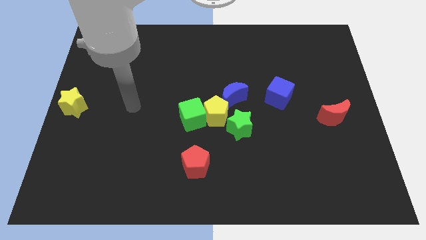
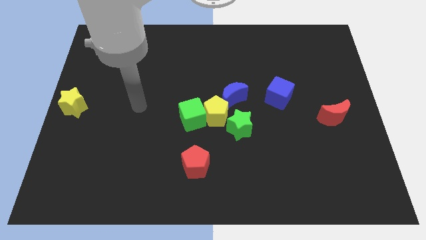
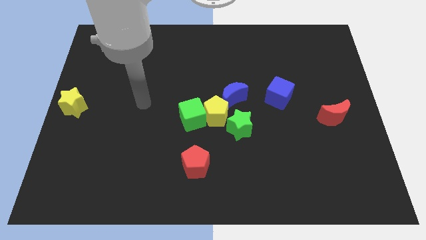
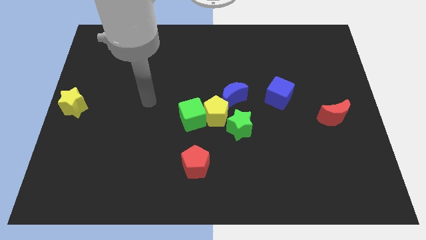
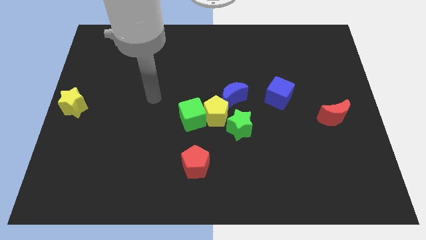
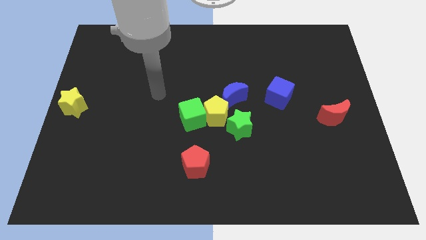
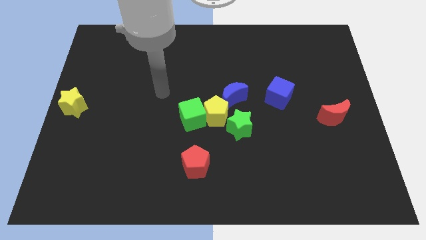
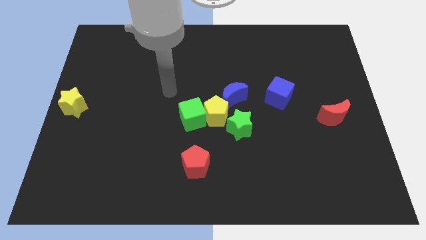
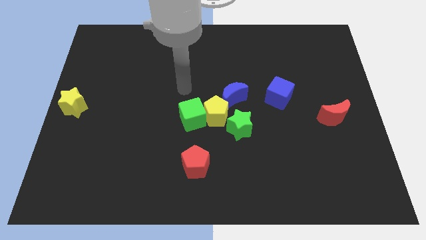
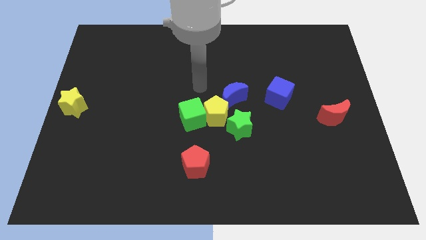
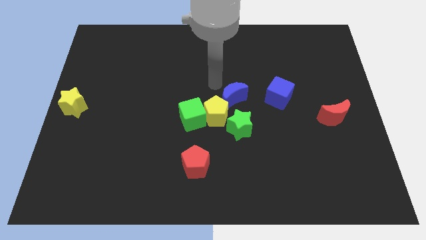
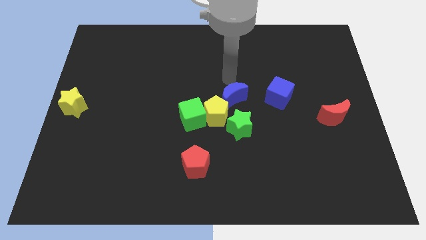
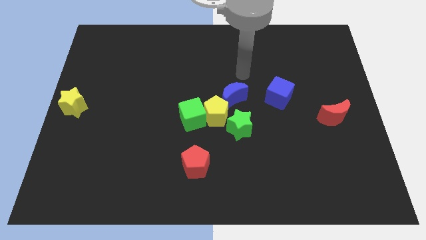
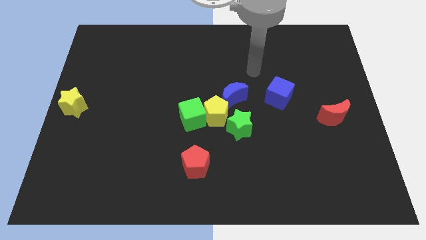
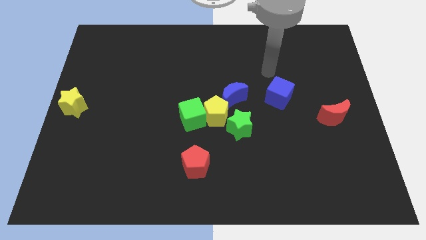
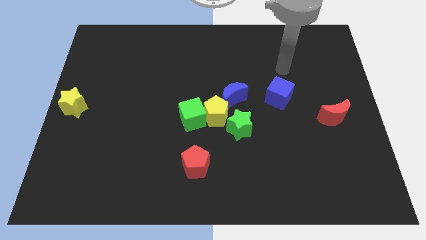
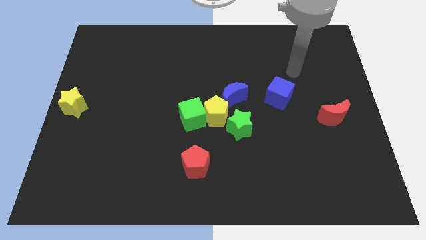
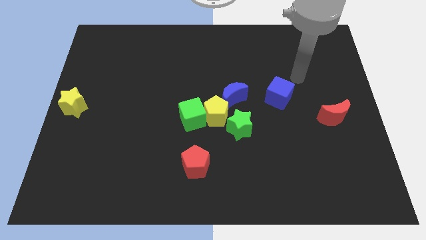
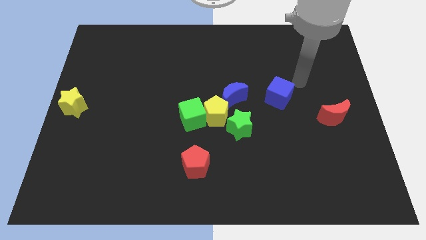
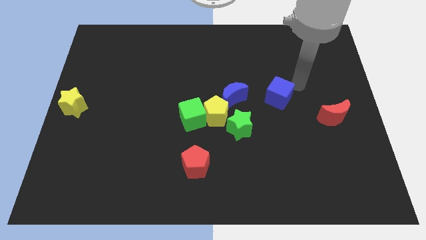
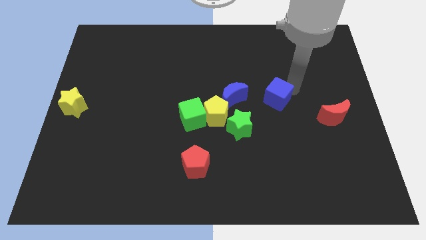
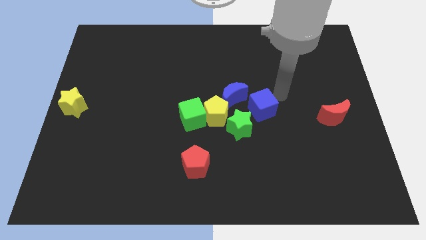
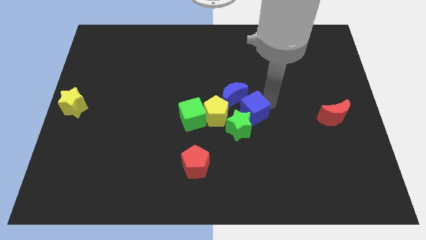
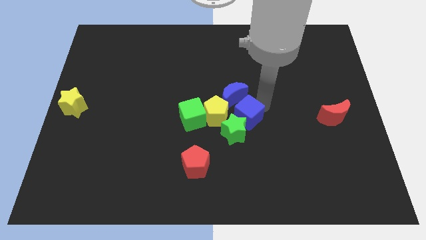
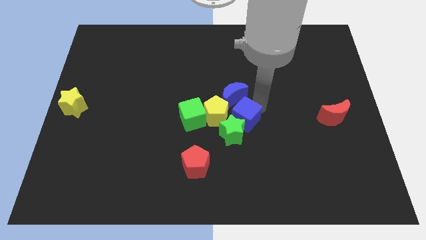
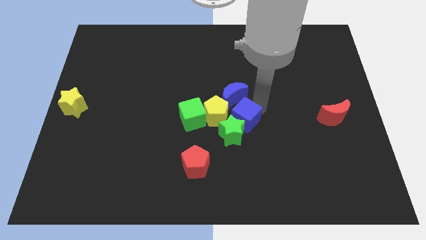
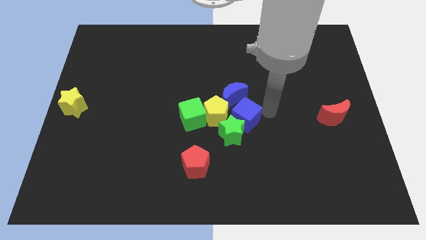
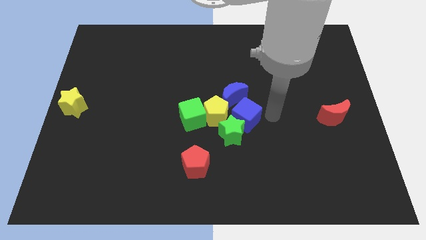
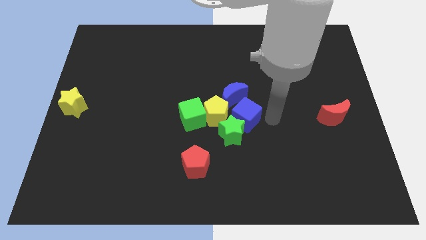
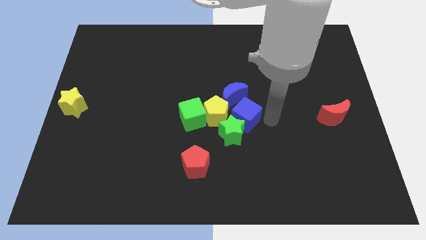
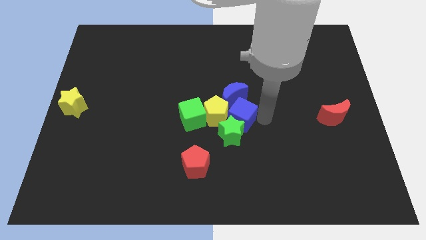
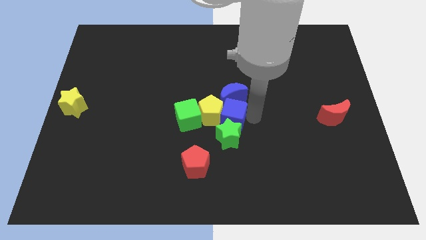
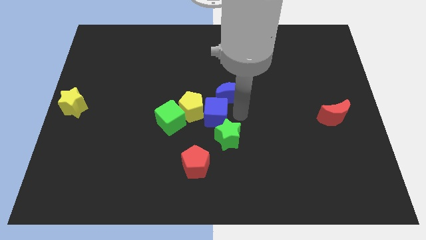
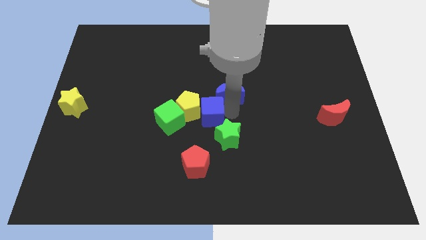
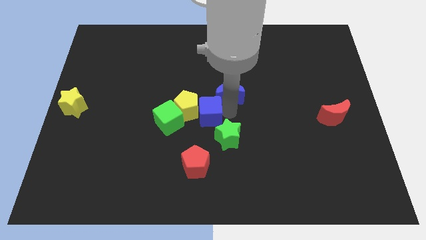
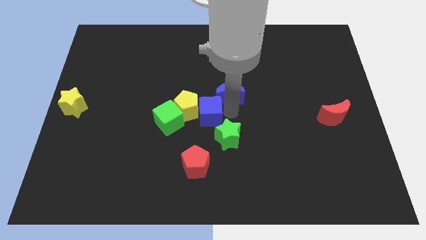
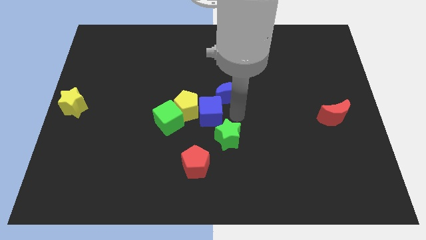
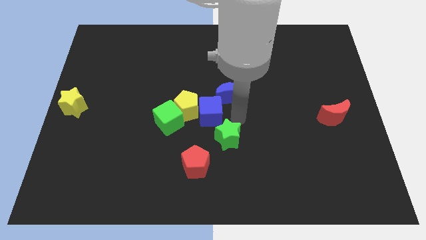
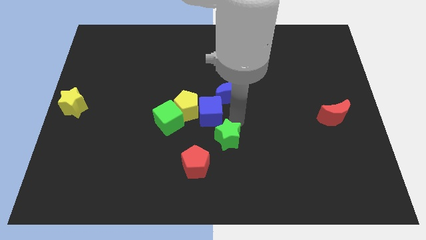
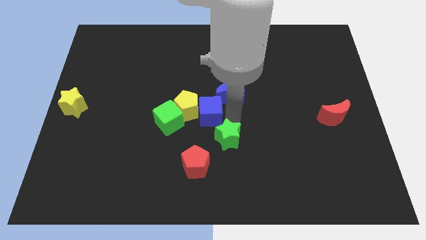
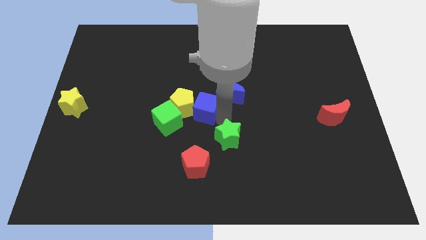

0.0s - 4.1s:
push the blue cube into the yellow pentagon

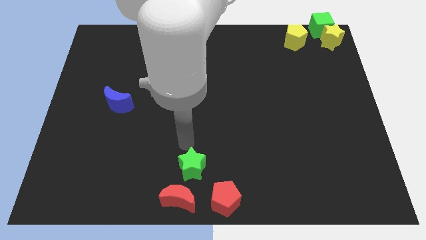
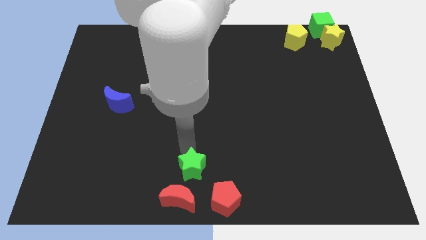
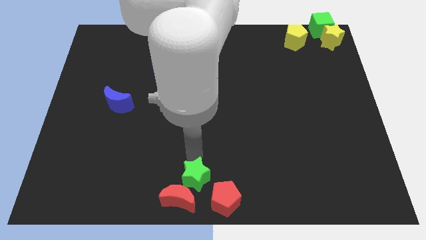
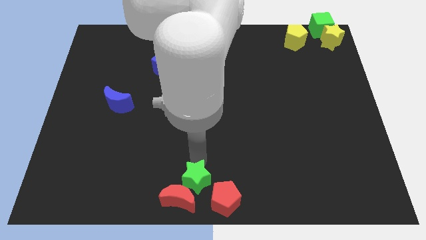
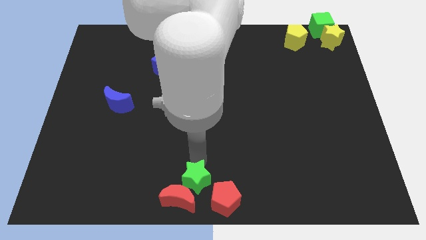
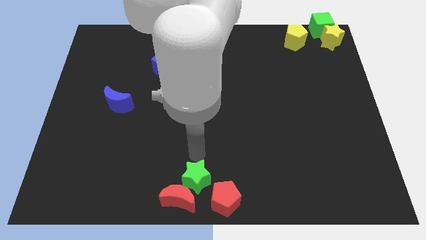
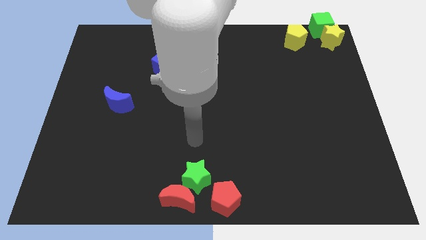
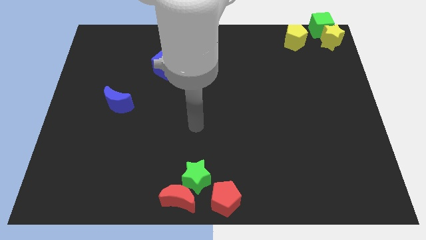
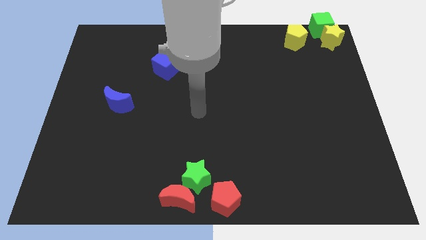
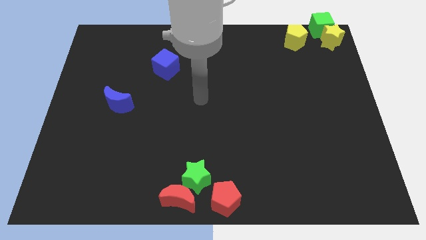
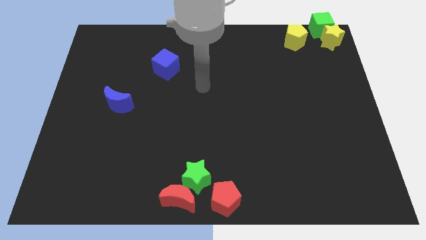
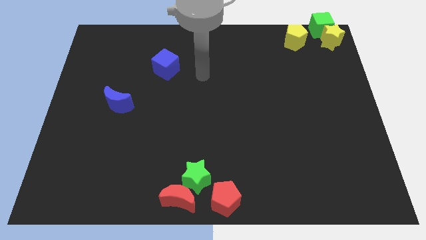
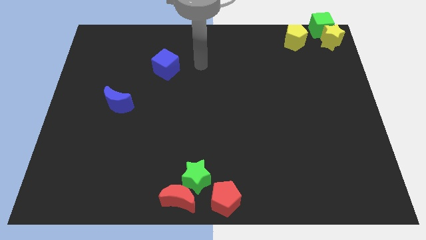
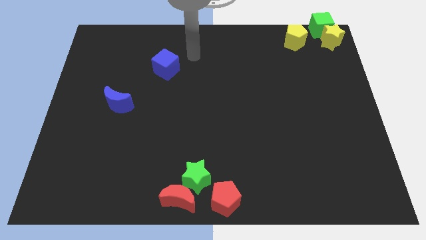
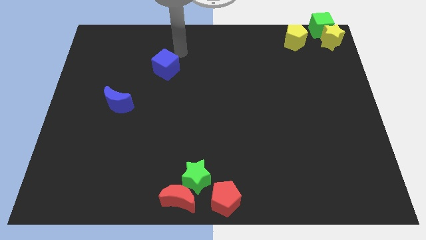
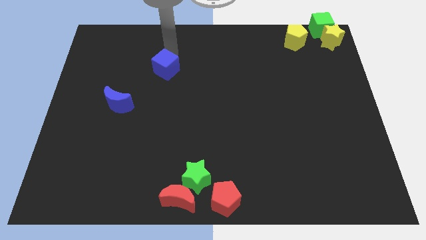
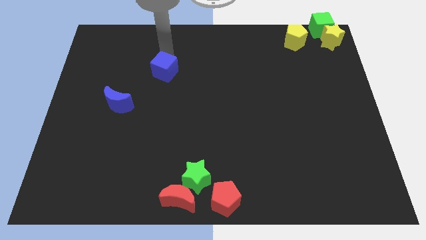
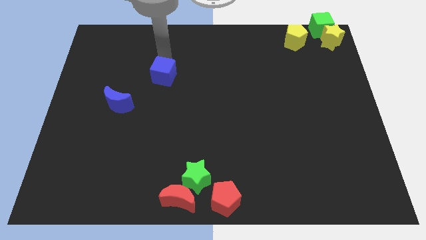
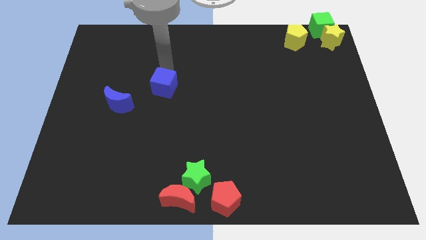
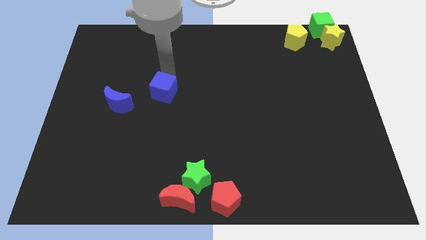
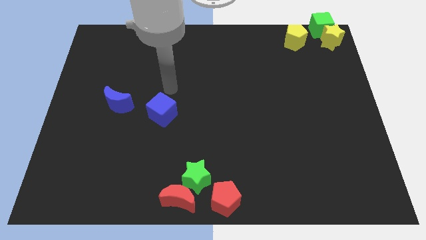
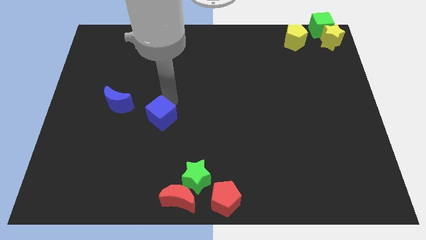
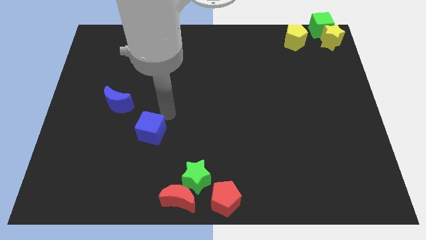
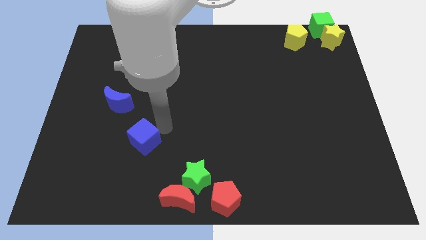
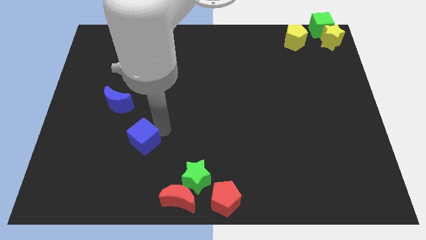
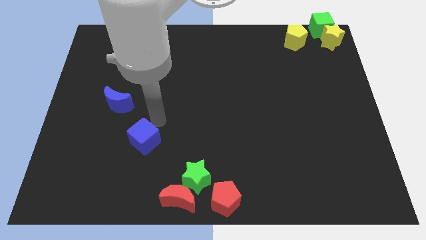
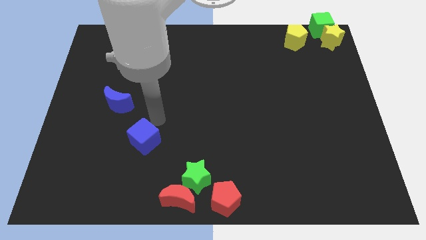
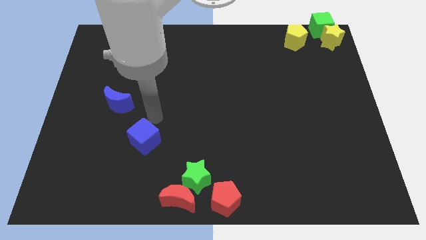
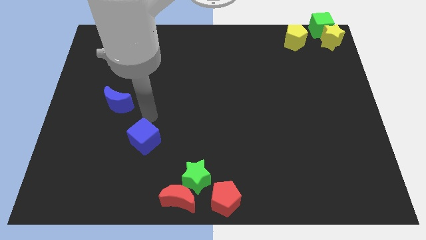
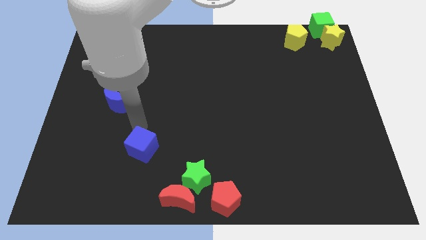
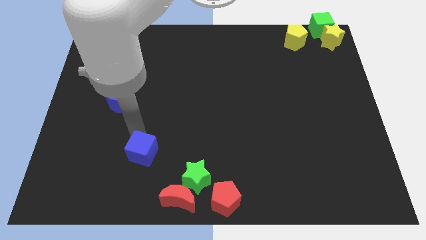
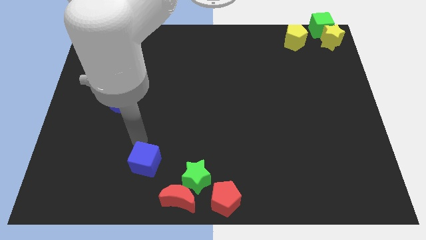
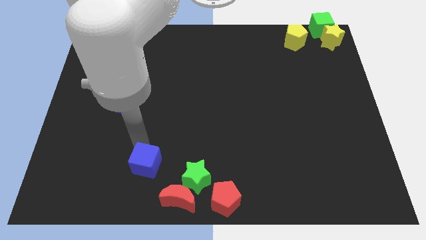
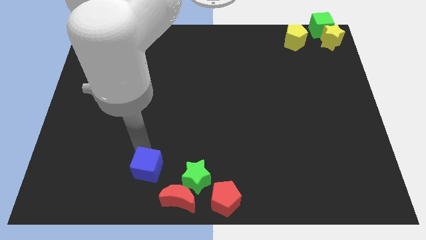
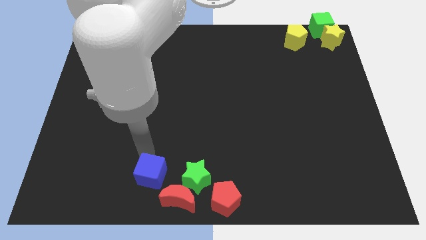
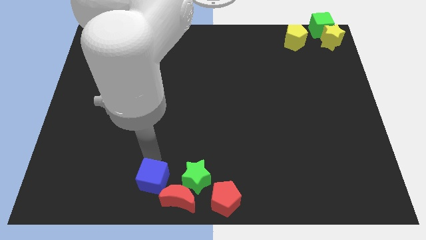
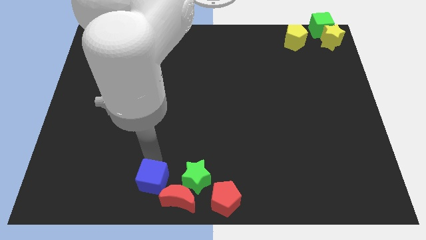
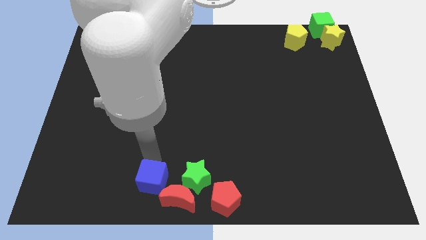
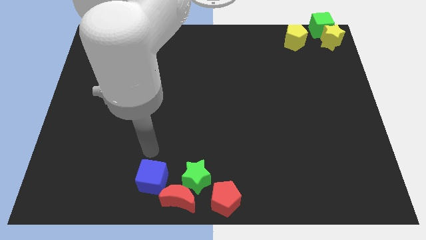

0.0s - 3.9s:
place blue block close to red crescent

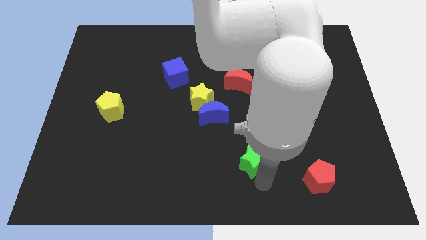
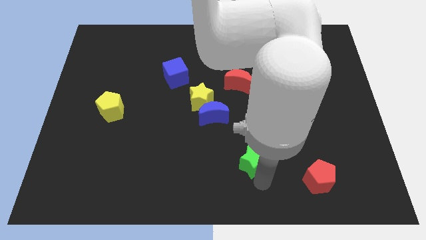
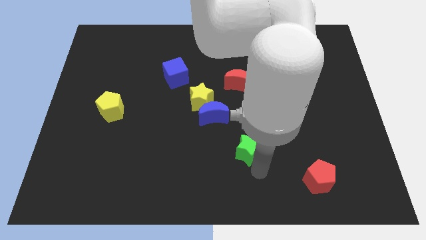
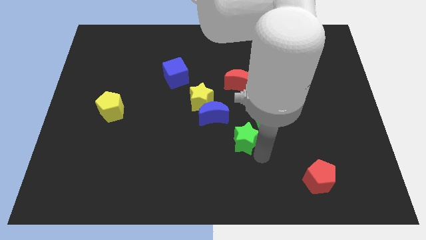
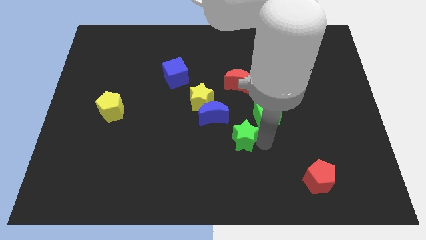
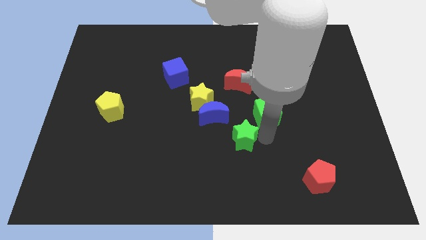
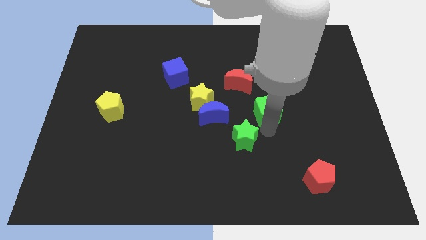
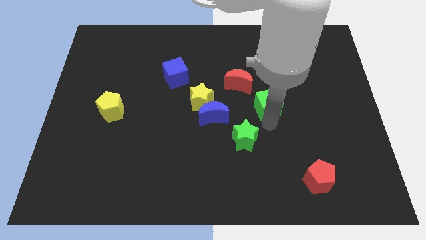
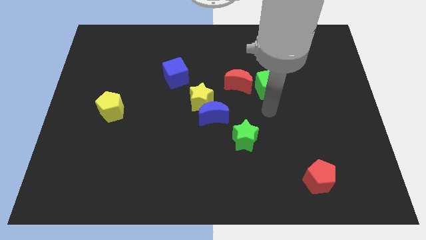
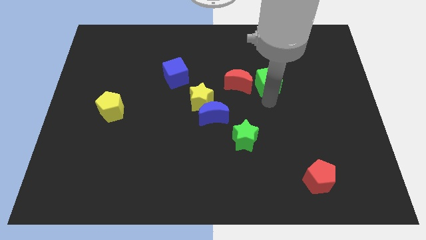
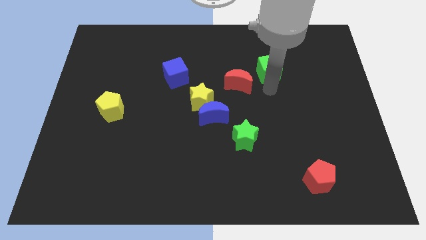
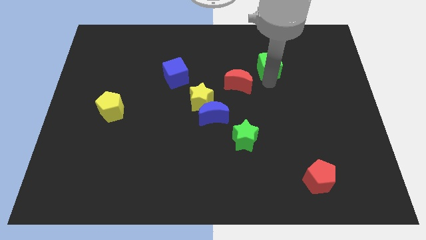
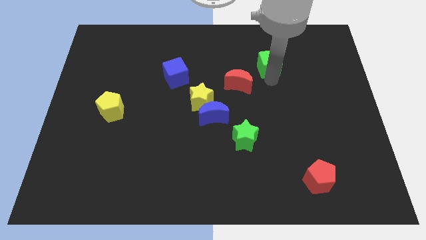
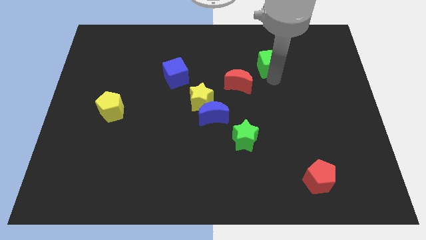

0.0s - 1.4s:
push the green cube towards the top
